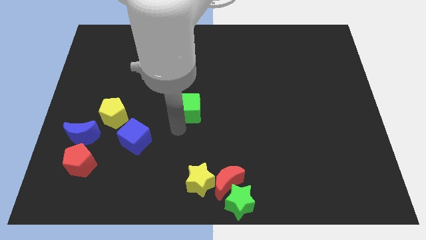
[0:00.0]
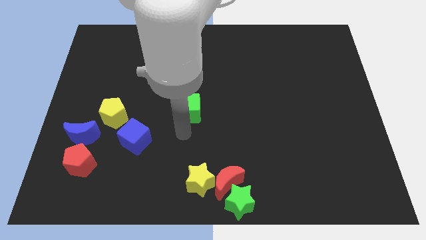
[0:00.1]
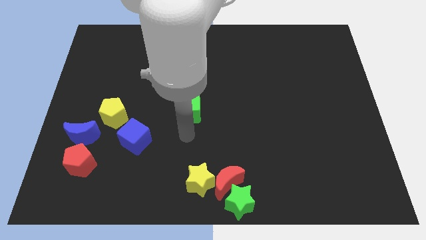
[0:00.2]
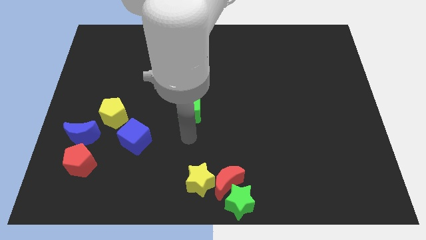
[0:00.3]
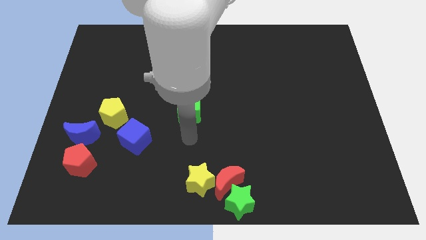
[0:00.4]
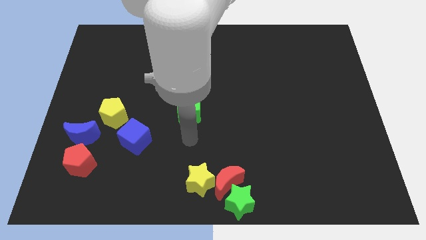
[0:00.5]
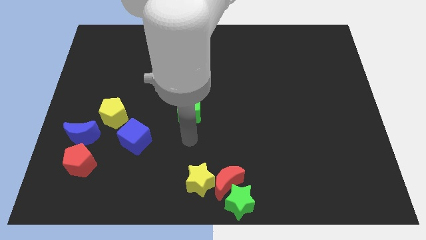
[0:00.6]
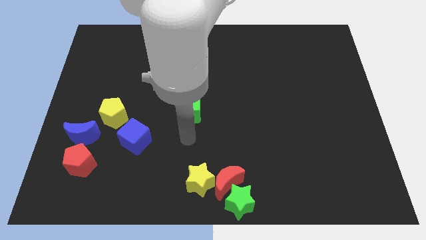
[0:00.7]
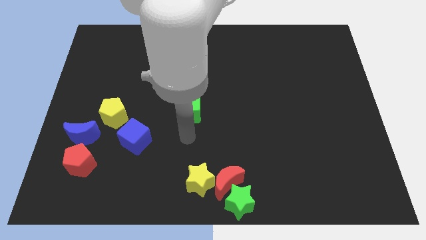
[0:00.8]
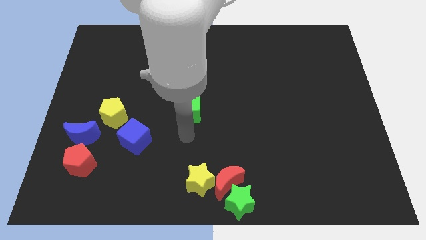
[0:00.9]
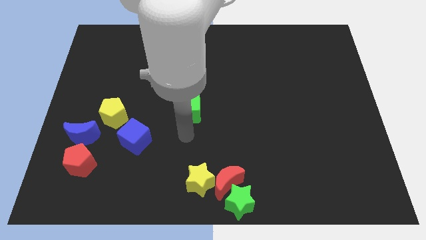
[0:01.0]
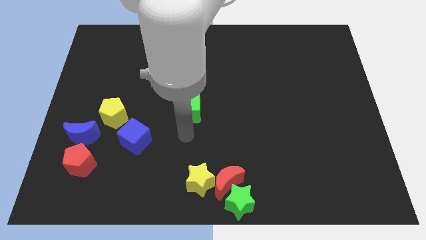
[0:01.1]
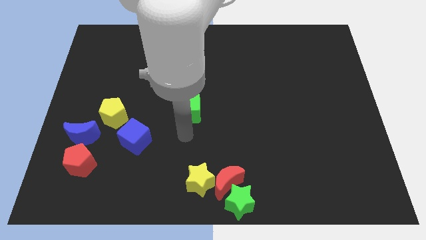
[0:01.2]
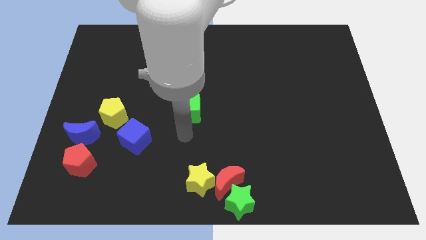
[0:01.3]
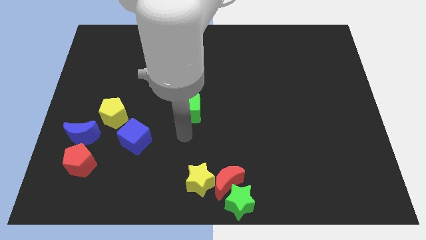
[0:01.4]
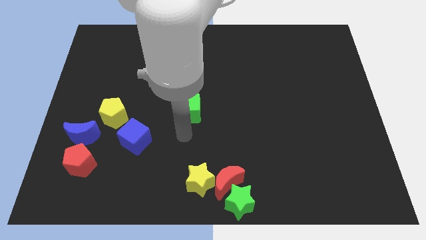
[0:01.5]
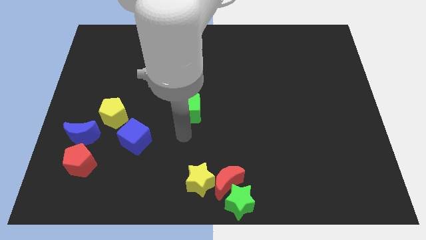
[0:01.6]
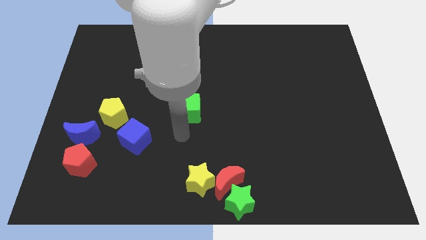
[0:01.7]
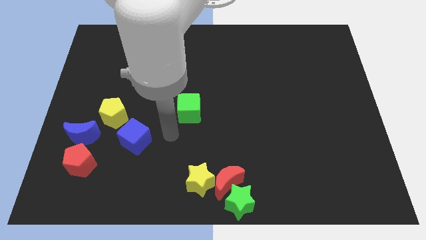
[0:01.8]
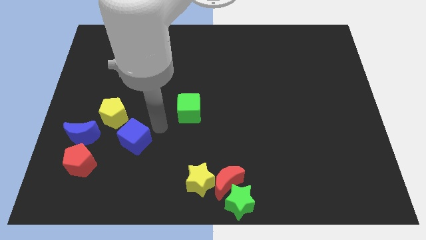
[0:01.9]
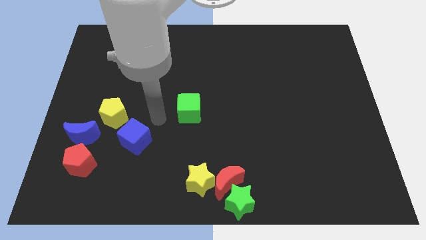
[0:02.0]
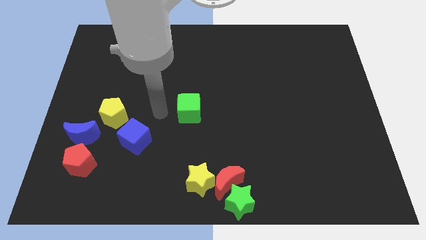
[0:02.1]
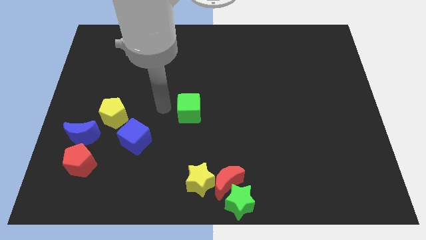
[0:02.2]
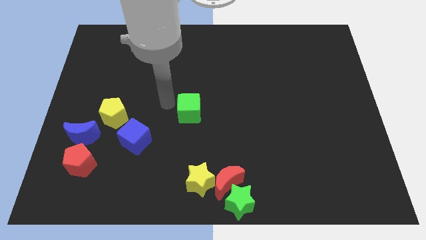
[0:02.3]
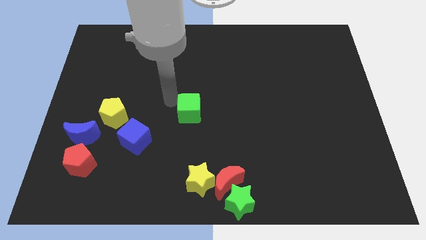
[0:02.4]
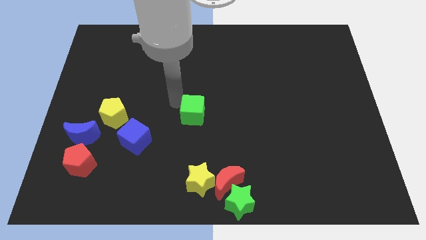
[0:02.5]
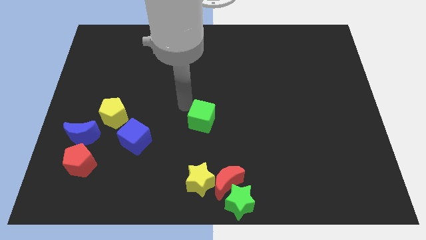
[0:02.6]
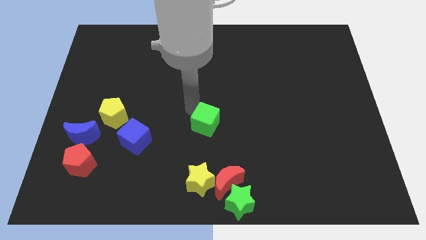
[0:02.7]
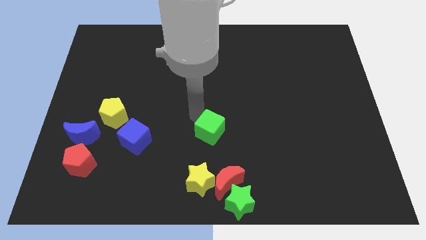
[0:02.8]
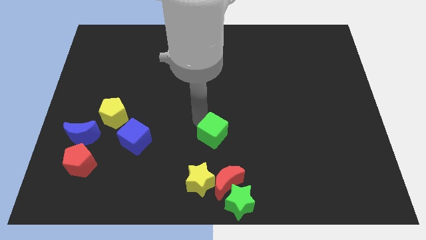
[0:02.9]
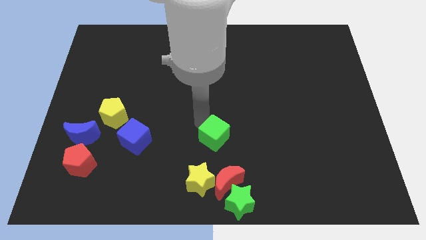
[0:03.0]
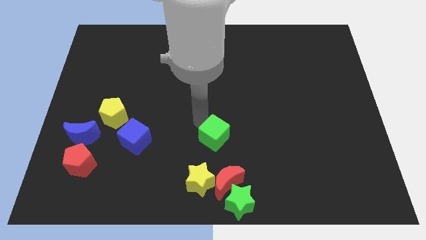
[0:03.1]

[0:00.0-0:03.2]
slightly push the green cube downwards

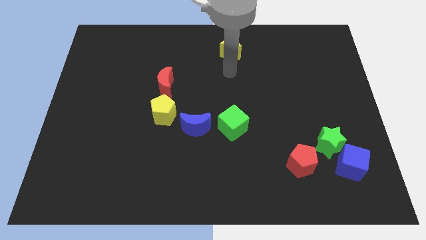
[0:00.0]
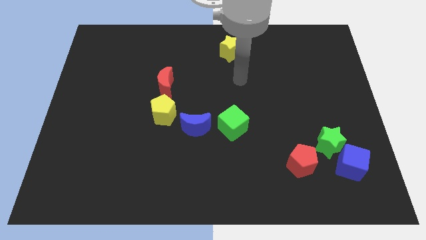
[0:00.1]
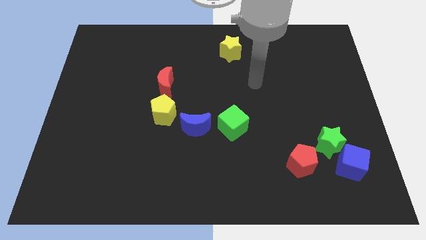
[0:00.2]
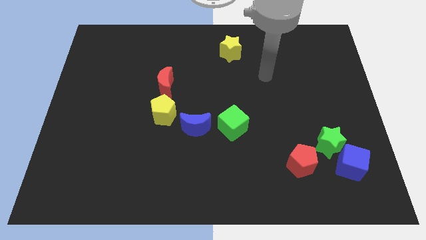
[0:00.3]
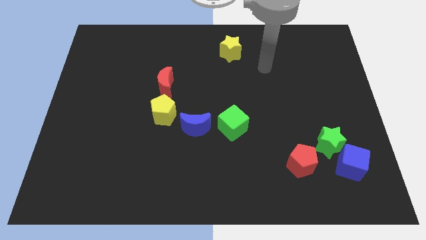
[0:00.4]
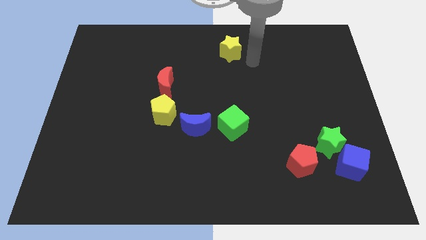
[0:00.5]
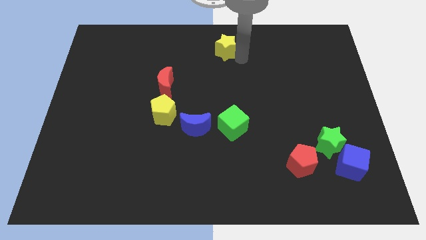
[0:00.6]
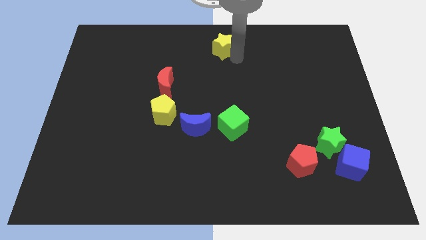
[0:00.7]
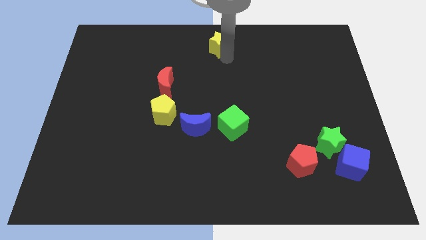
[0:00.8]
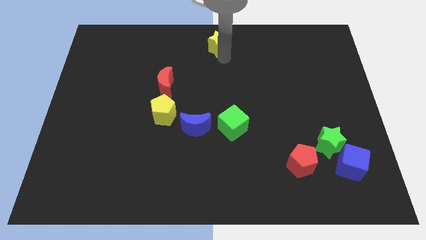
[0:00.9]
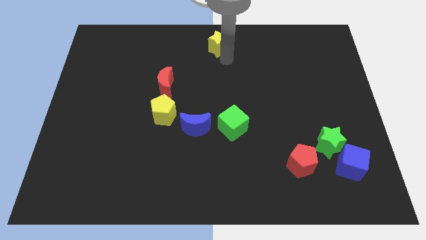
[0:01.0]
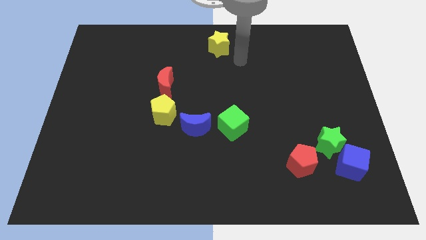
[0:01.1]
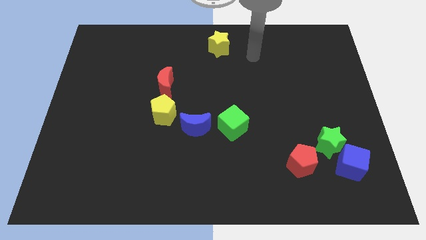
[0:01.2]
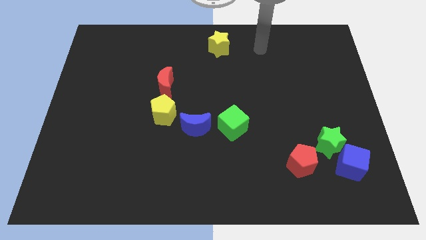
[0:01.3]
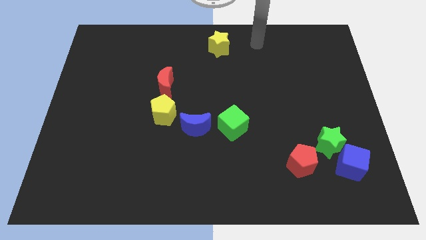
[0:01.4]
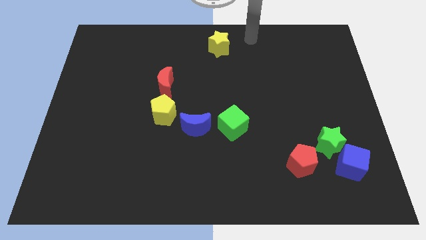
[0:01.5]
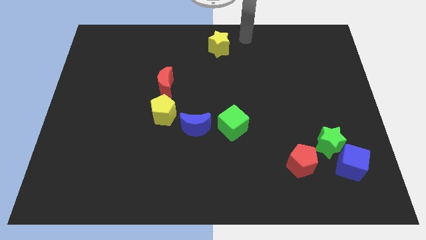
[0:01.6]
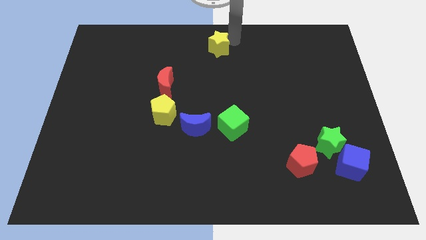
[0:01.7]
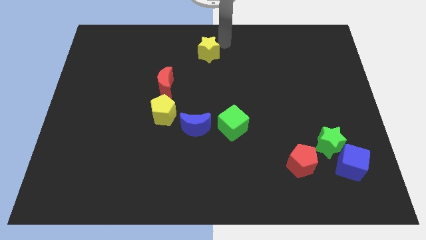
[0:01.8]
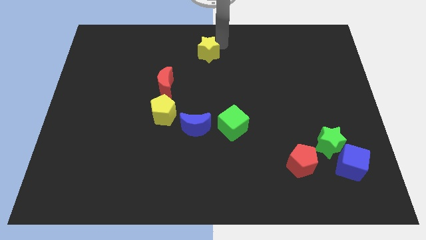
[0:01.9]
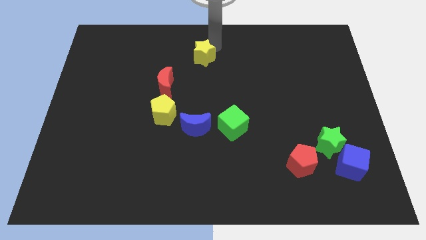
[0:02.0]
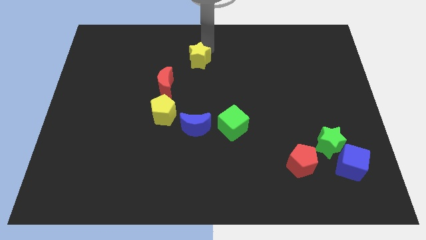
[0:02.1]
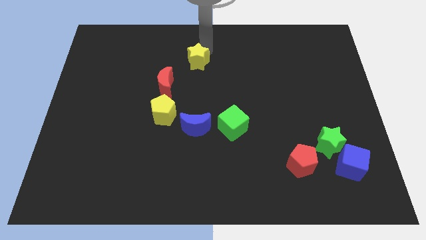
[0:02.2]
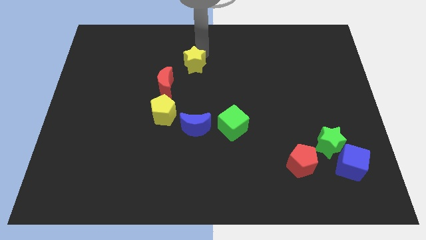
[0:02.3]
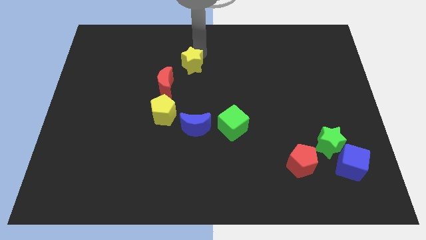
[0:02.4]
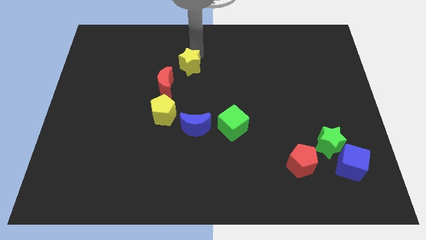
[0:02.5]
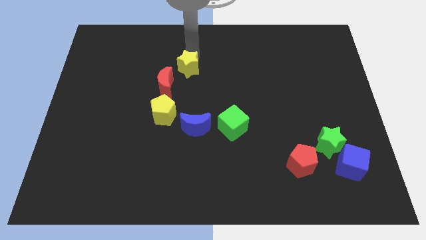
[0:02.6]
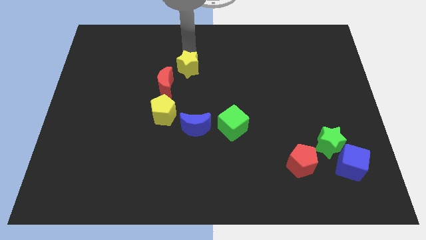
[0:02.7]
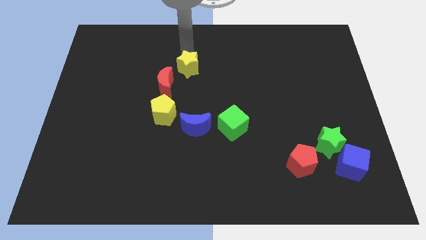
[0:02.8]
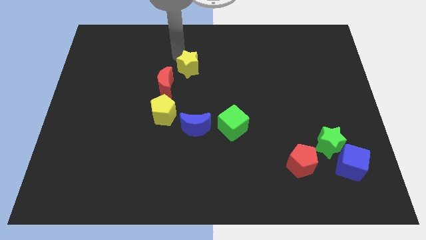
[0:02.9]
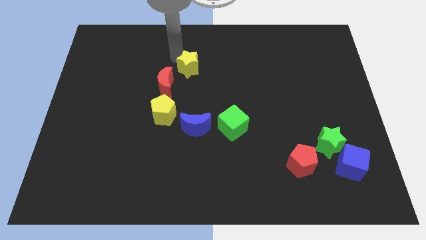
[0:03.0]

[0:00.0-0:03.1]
push yellow star near red moon

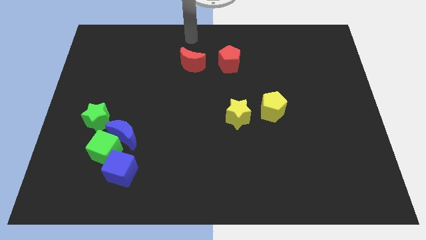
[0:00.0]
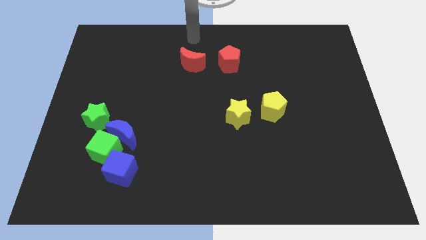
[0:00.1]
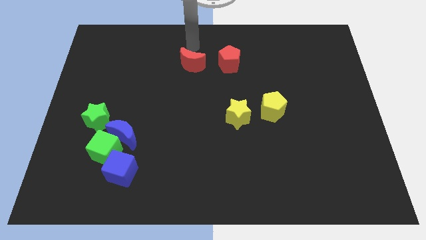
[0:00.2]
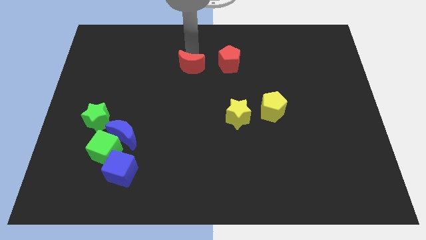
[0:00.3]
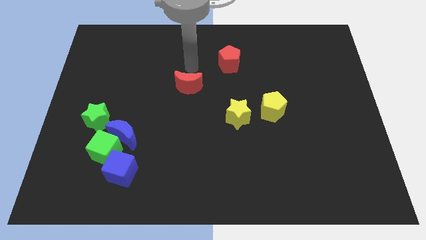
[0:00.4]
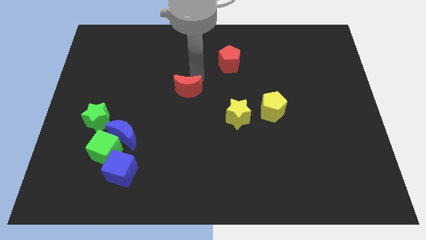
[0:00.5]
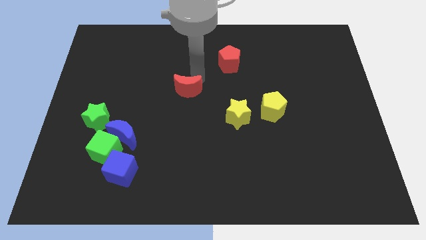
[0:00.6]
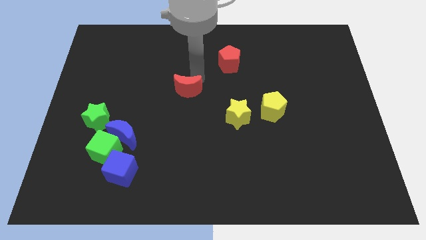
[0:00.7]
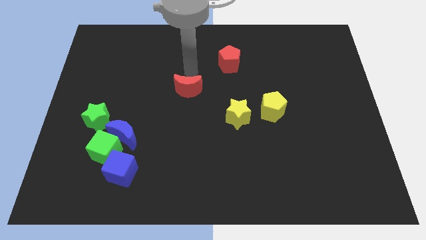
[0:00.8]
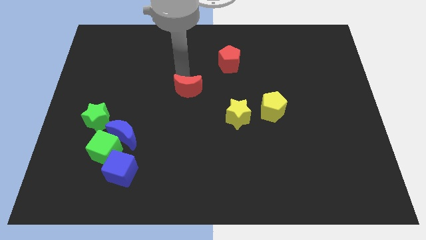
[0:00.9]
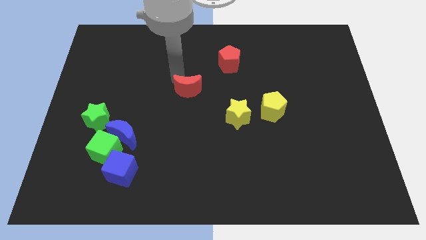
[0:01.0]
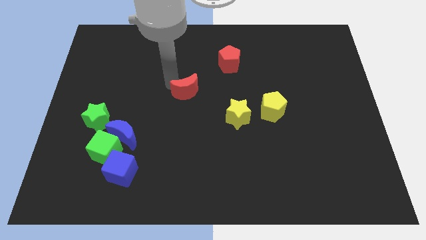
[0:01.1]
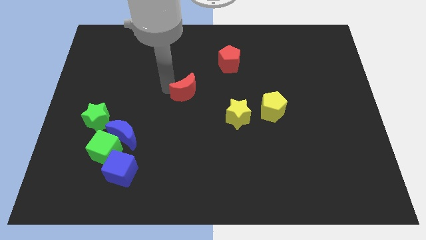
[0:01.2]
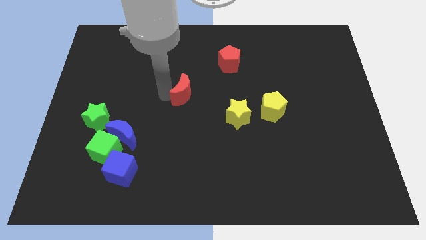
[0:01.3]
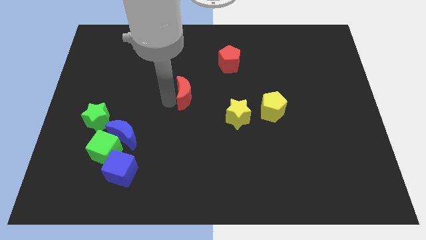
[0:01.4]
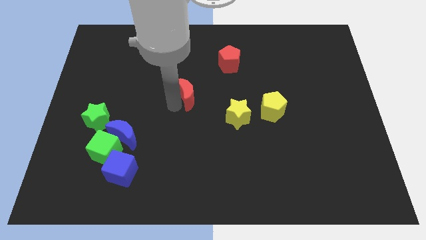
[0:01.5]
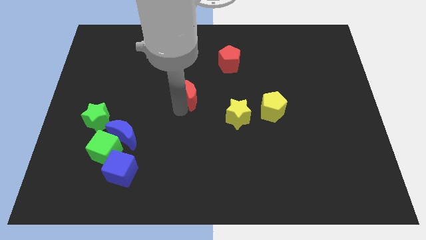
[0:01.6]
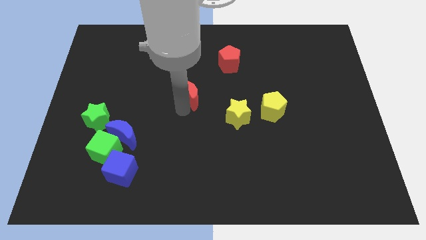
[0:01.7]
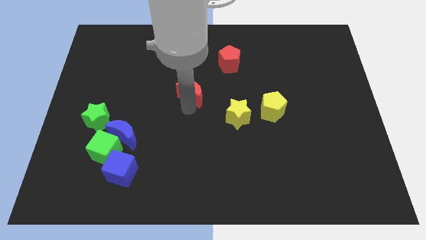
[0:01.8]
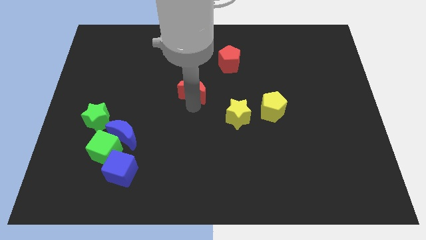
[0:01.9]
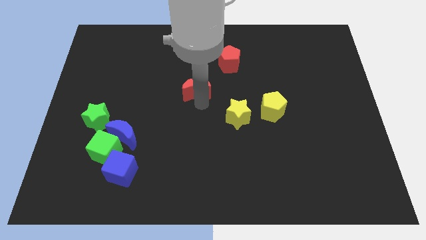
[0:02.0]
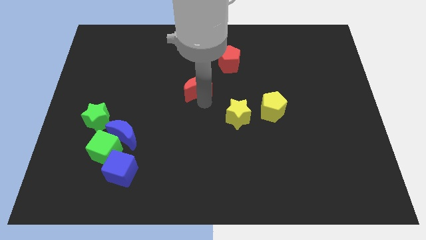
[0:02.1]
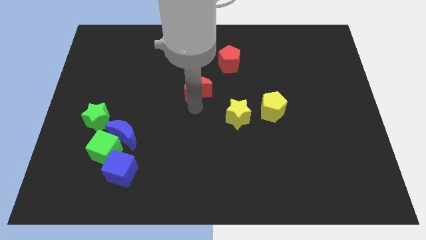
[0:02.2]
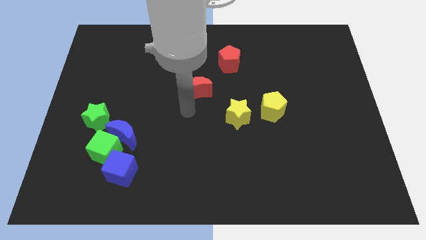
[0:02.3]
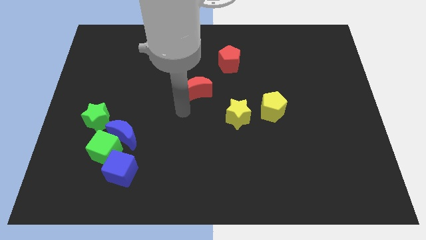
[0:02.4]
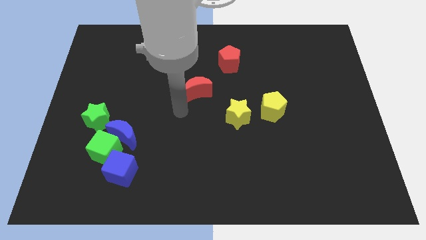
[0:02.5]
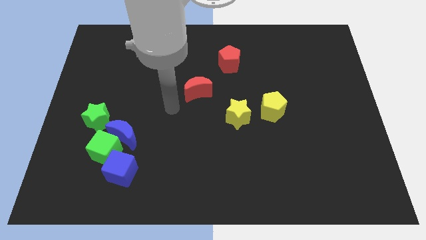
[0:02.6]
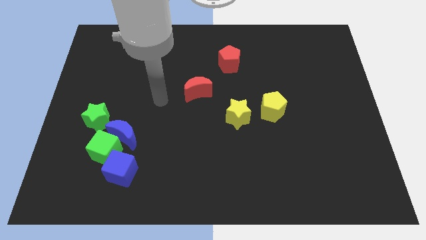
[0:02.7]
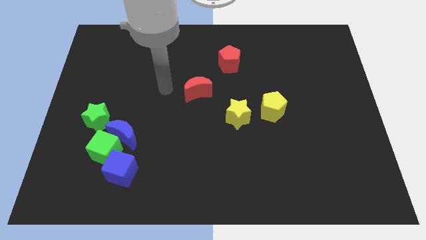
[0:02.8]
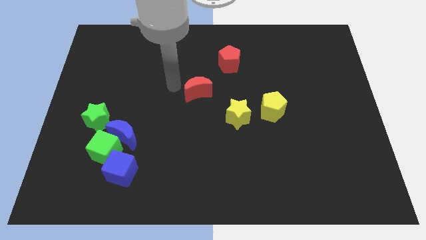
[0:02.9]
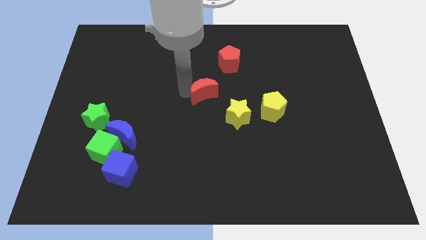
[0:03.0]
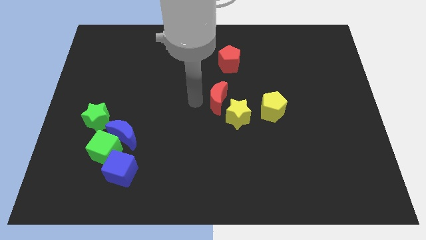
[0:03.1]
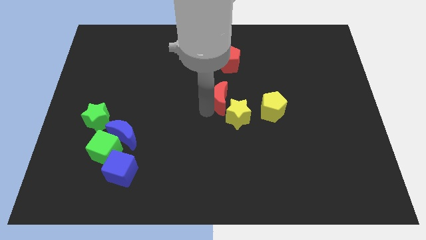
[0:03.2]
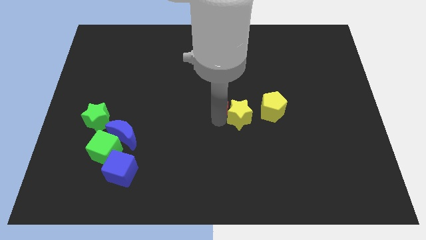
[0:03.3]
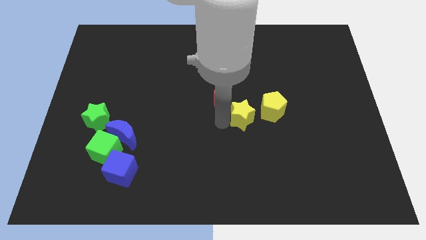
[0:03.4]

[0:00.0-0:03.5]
move the red crescent into the yellow star
